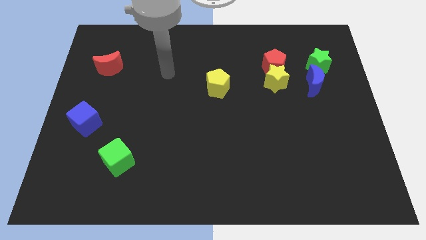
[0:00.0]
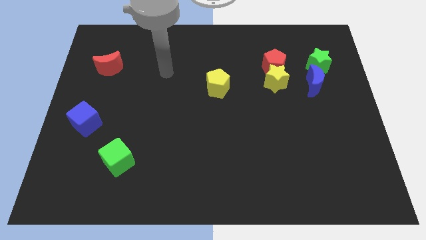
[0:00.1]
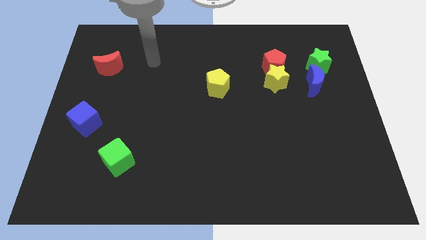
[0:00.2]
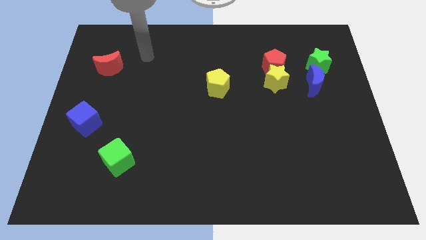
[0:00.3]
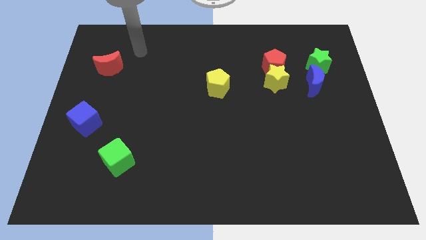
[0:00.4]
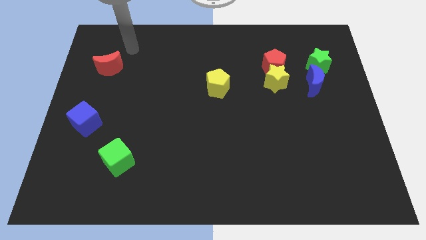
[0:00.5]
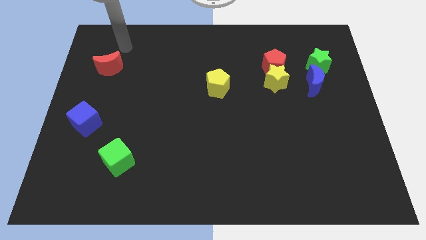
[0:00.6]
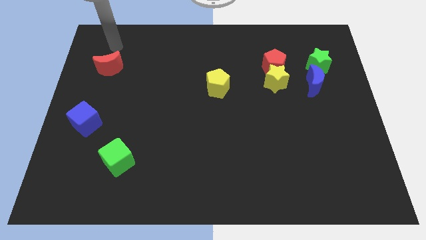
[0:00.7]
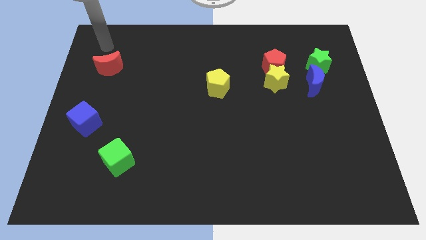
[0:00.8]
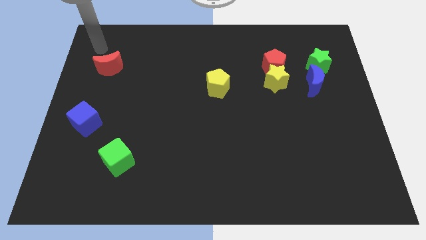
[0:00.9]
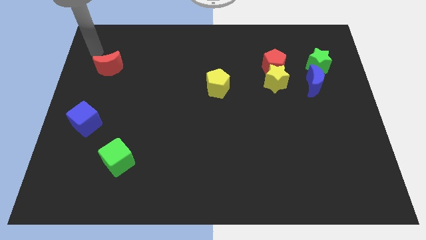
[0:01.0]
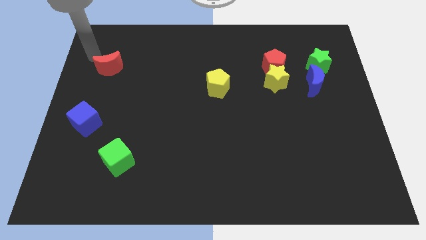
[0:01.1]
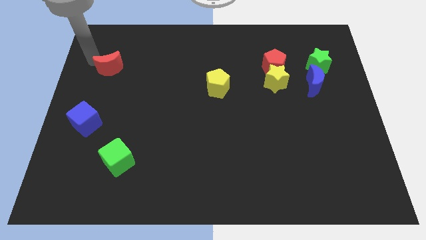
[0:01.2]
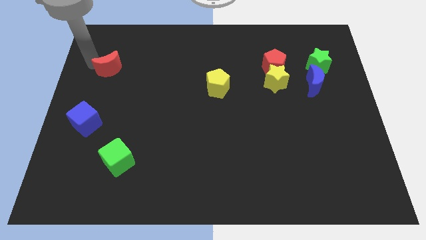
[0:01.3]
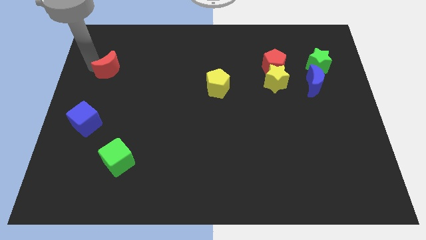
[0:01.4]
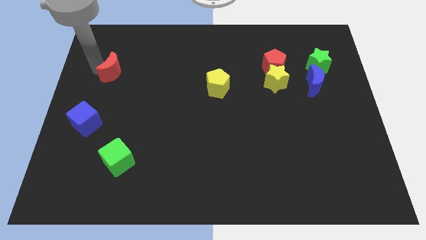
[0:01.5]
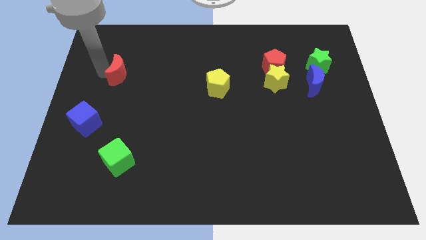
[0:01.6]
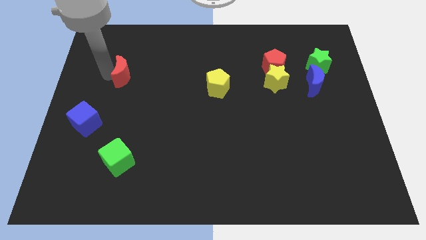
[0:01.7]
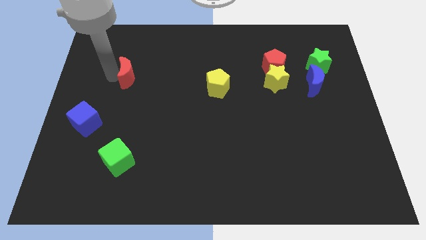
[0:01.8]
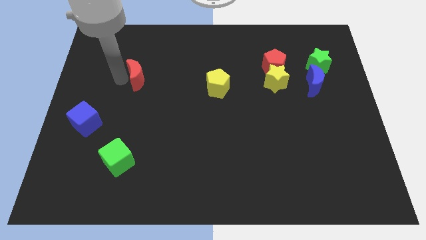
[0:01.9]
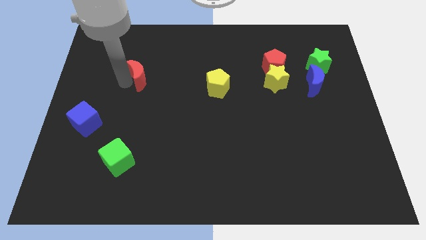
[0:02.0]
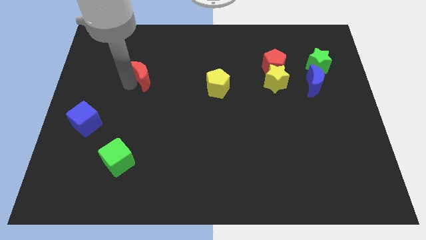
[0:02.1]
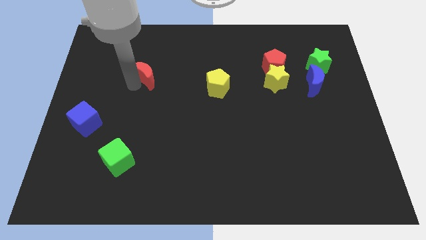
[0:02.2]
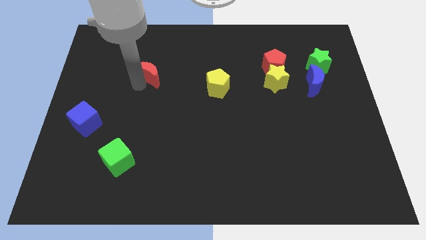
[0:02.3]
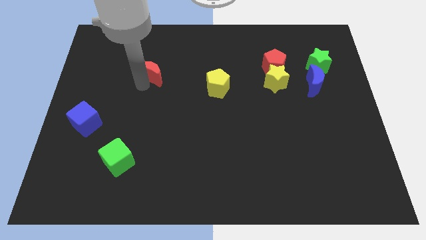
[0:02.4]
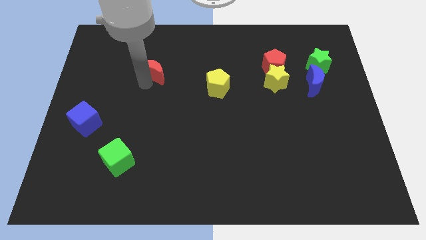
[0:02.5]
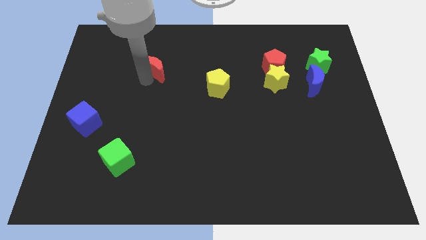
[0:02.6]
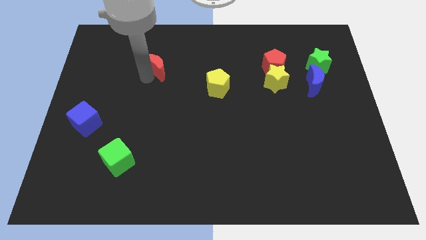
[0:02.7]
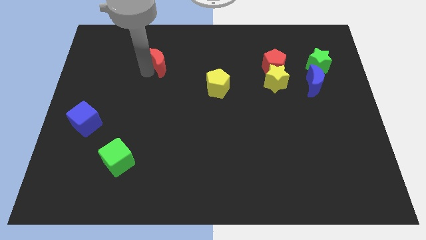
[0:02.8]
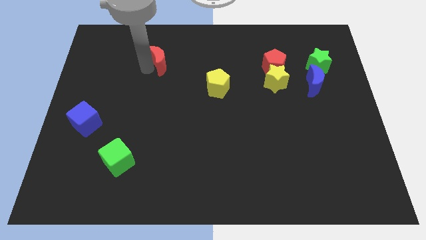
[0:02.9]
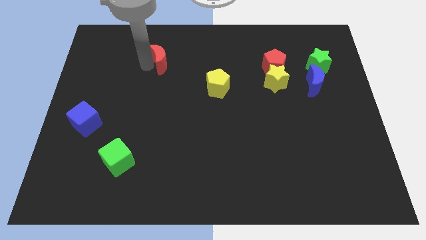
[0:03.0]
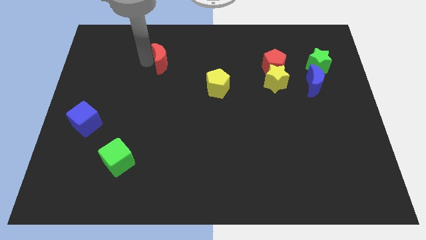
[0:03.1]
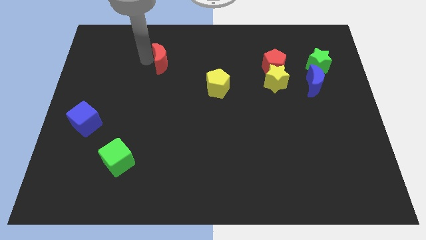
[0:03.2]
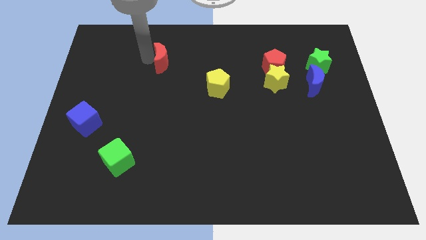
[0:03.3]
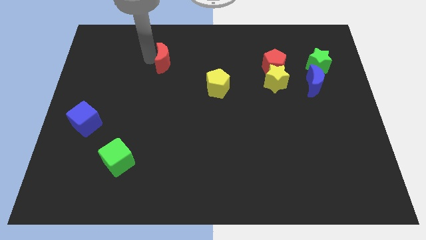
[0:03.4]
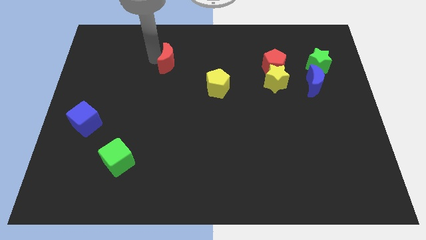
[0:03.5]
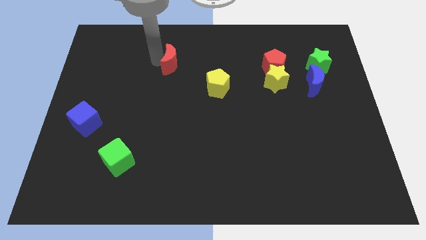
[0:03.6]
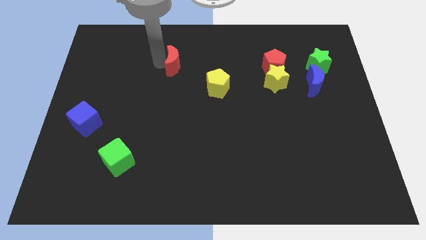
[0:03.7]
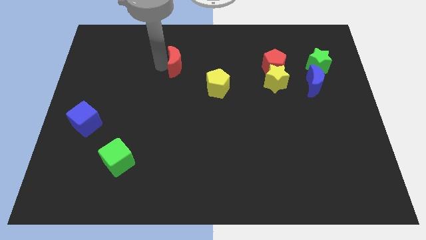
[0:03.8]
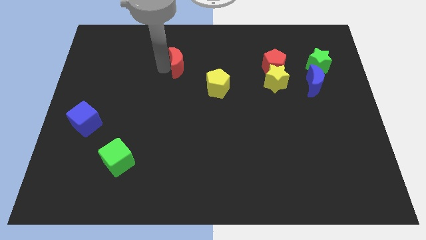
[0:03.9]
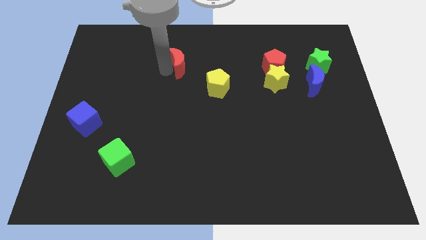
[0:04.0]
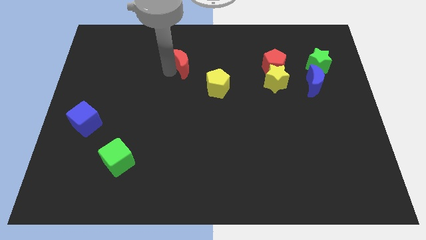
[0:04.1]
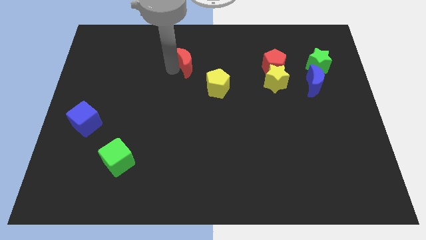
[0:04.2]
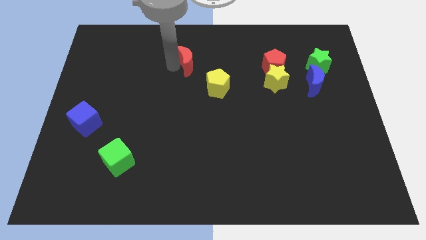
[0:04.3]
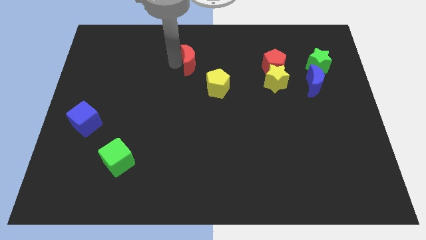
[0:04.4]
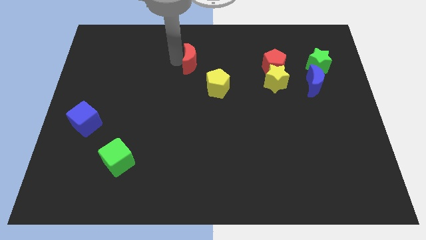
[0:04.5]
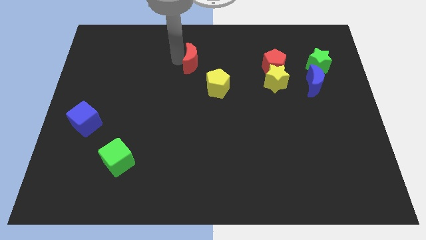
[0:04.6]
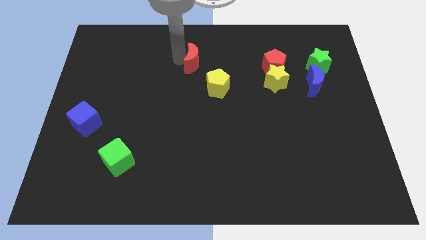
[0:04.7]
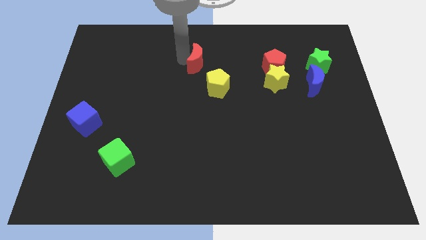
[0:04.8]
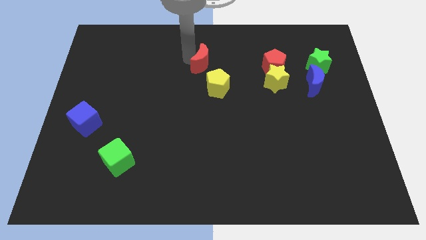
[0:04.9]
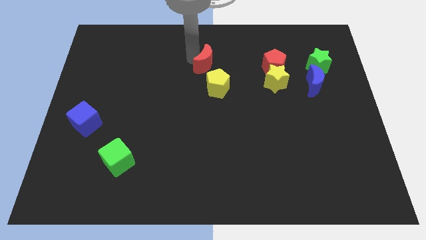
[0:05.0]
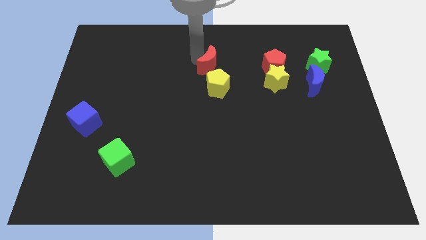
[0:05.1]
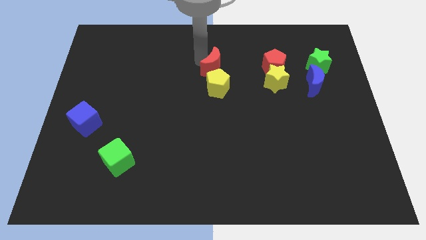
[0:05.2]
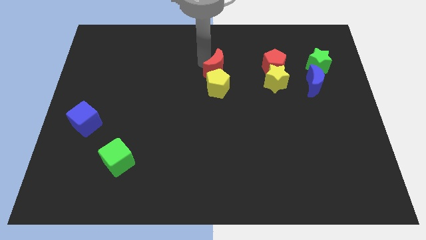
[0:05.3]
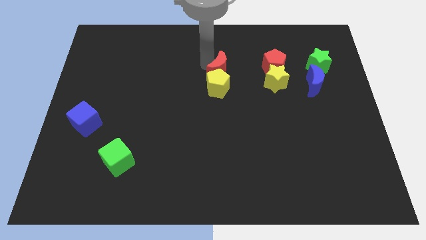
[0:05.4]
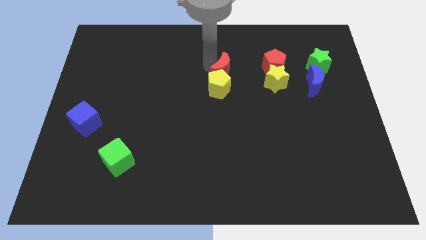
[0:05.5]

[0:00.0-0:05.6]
push the red moon close to the yellow pentagon

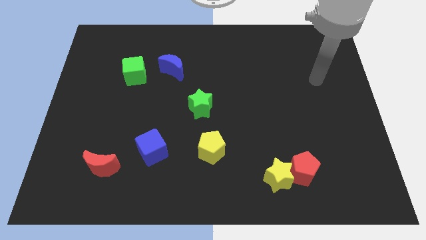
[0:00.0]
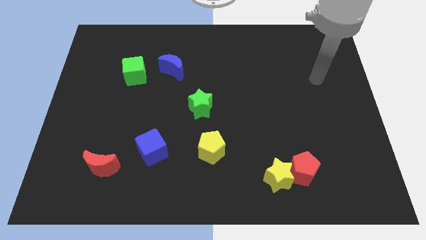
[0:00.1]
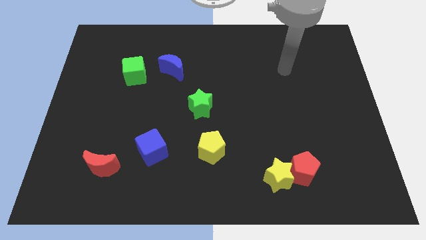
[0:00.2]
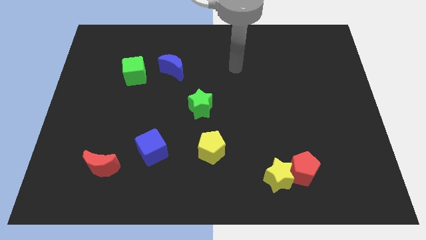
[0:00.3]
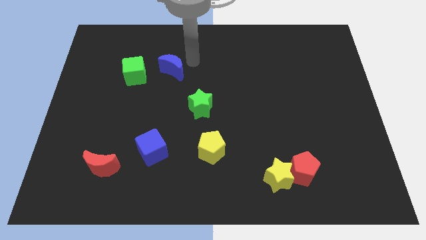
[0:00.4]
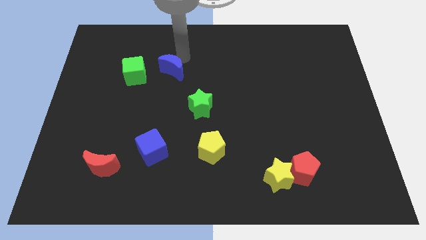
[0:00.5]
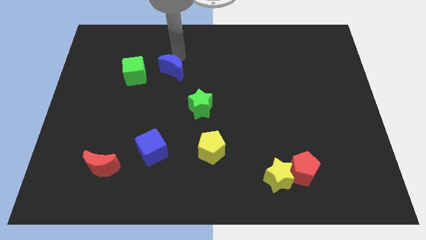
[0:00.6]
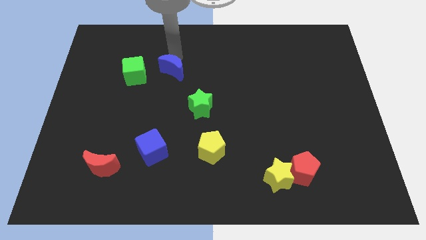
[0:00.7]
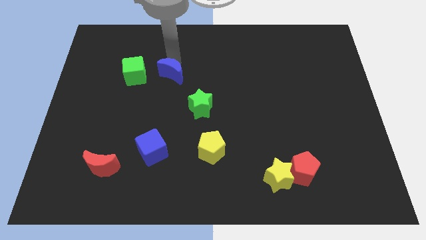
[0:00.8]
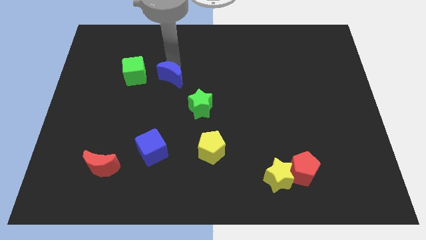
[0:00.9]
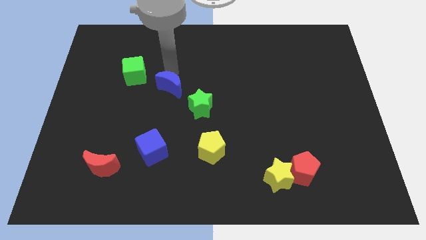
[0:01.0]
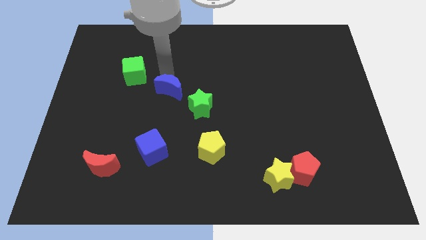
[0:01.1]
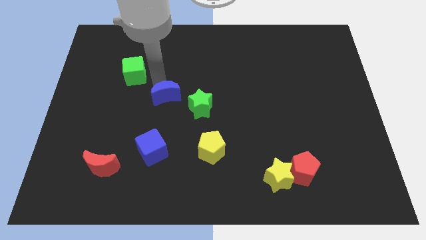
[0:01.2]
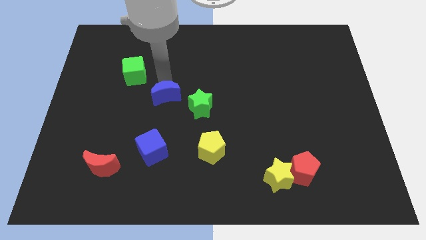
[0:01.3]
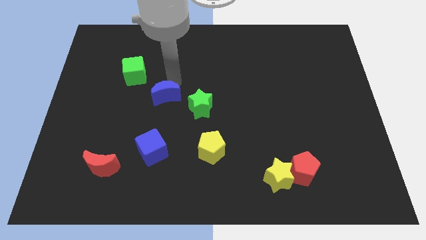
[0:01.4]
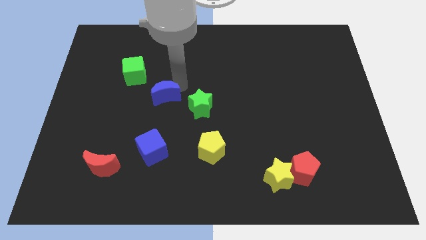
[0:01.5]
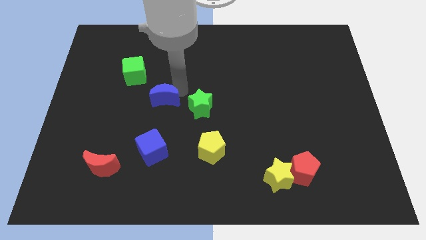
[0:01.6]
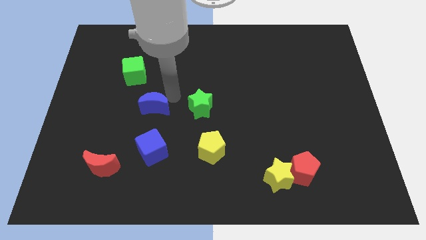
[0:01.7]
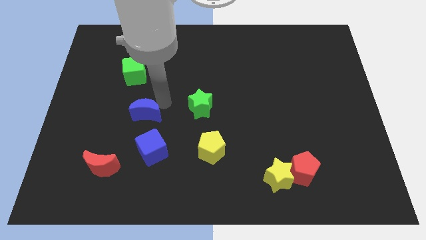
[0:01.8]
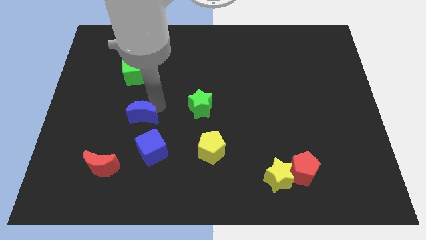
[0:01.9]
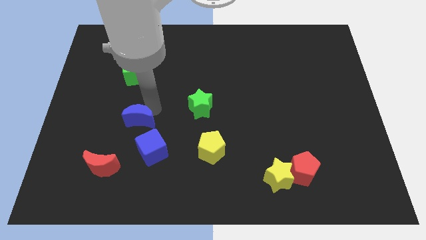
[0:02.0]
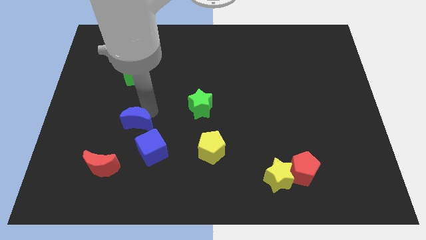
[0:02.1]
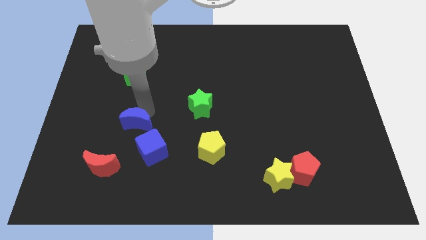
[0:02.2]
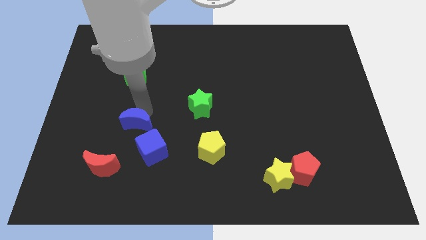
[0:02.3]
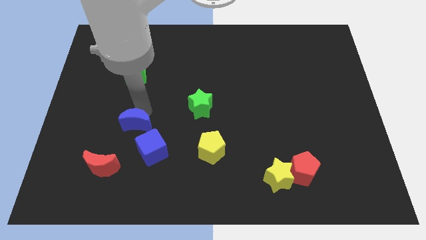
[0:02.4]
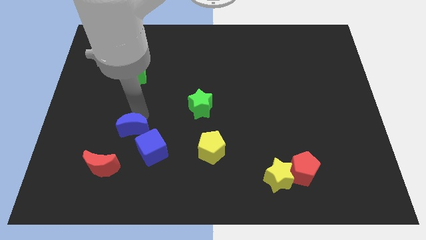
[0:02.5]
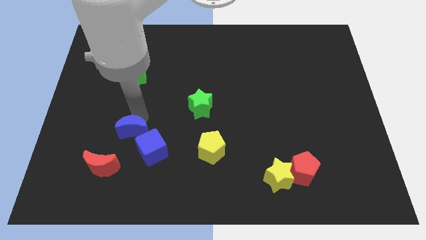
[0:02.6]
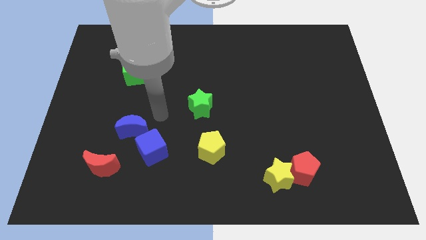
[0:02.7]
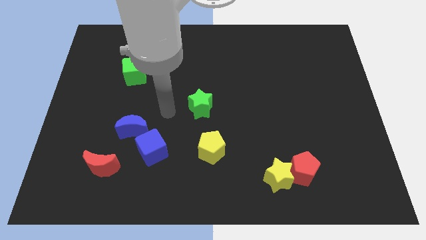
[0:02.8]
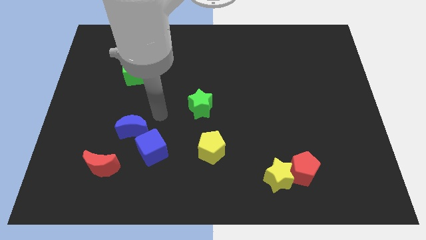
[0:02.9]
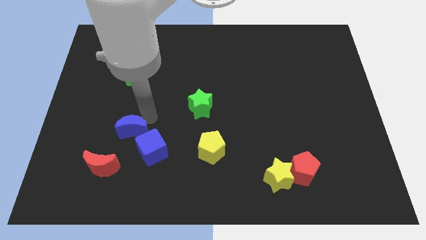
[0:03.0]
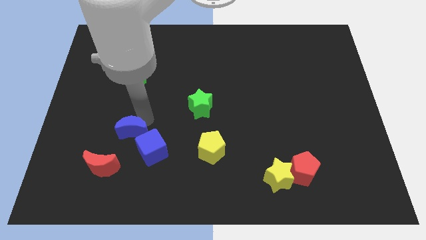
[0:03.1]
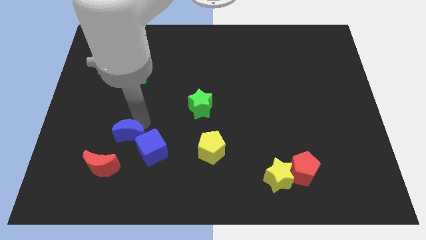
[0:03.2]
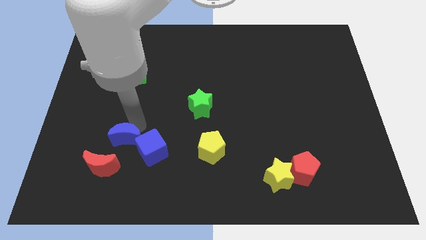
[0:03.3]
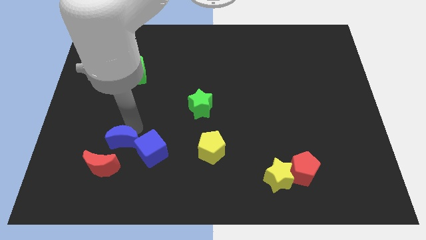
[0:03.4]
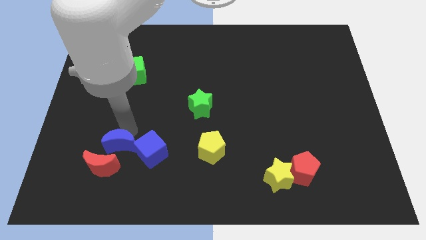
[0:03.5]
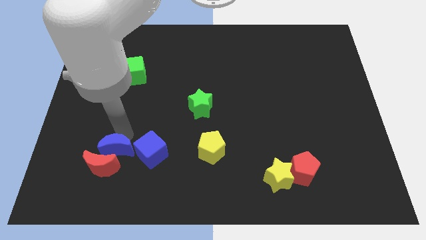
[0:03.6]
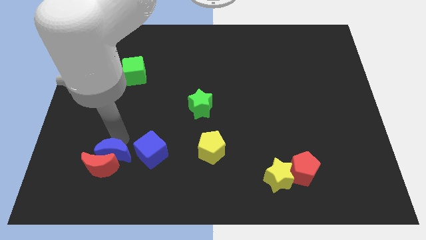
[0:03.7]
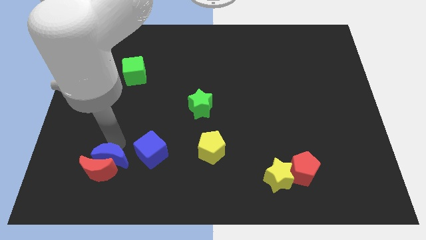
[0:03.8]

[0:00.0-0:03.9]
put the blue moon towards the red moon
